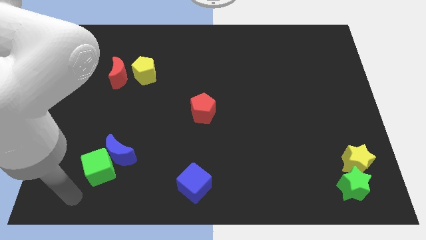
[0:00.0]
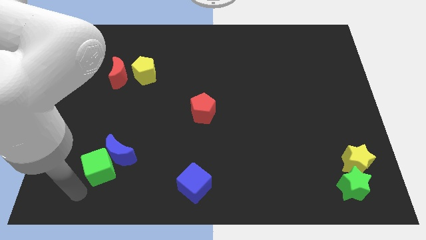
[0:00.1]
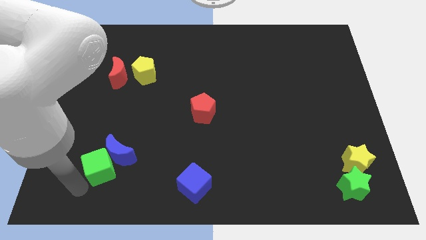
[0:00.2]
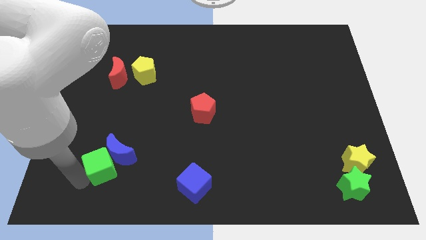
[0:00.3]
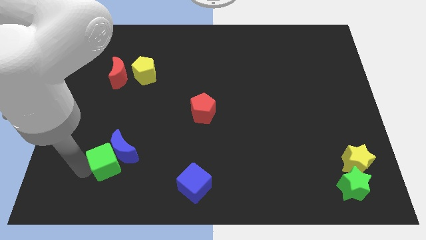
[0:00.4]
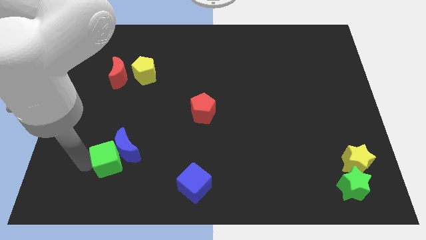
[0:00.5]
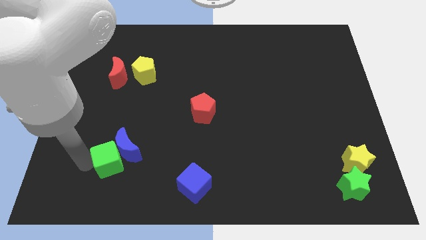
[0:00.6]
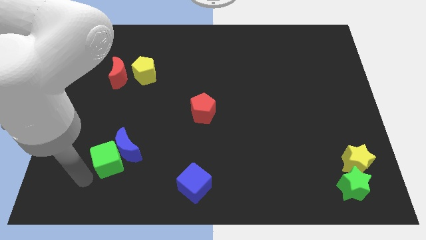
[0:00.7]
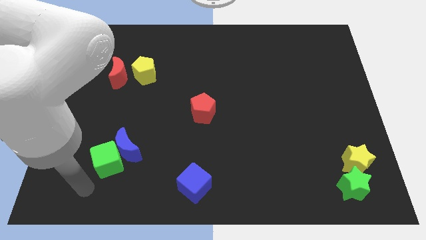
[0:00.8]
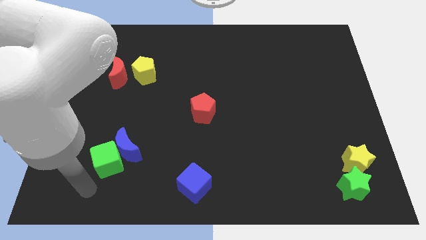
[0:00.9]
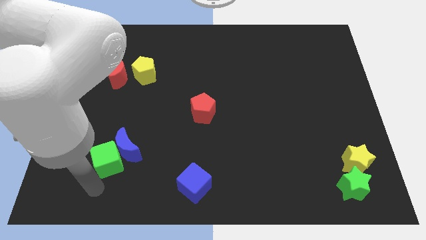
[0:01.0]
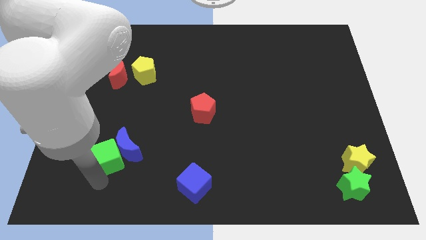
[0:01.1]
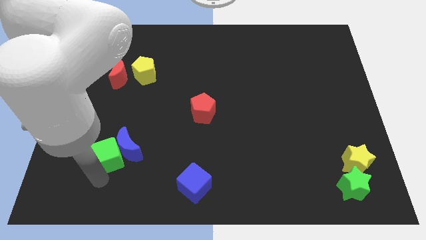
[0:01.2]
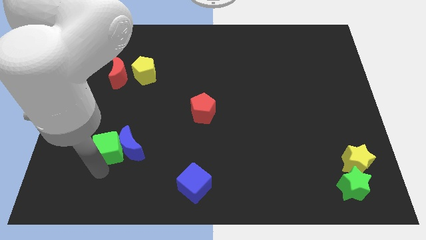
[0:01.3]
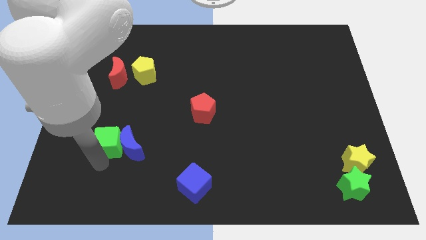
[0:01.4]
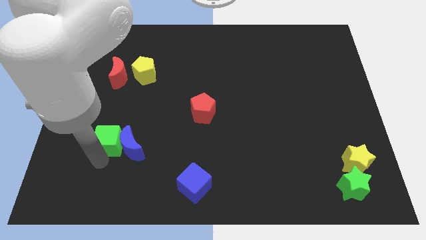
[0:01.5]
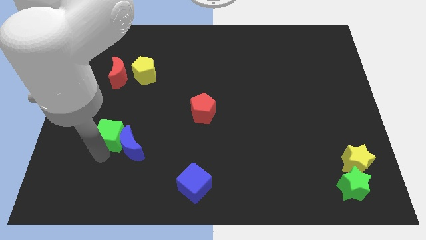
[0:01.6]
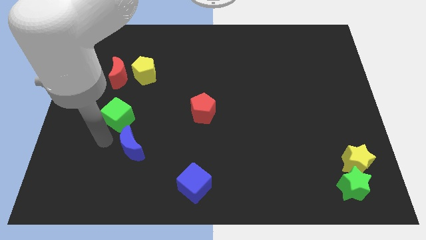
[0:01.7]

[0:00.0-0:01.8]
separate green cube from the blue moon

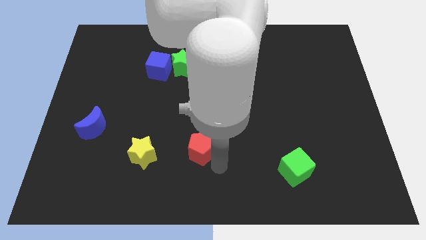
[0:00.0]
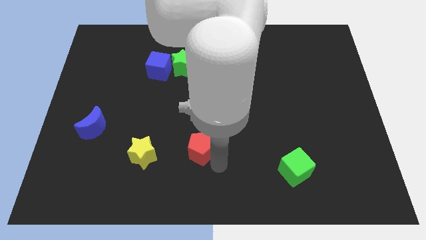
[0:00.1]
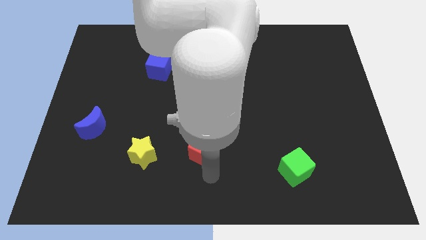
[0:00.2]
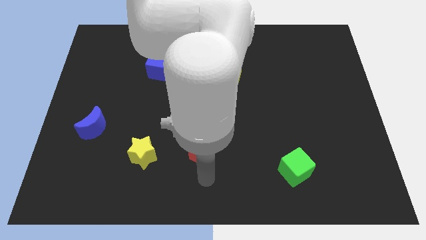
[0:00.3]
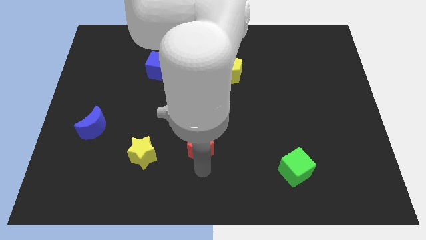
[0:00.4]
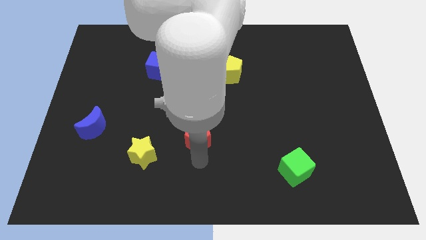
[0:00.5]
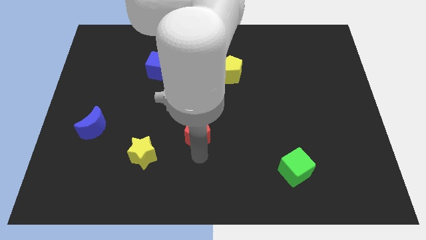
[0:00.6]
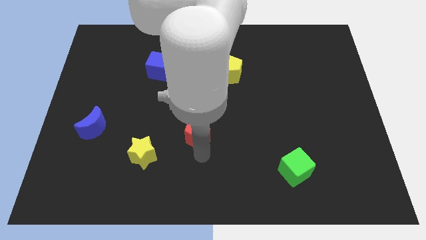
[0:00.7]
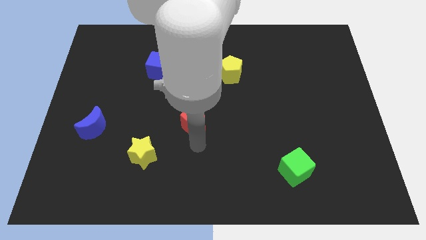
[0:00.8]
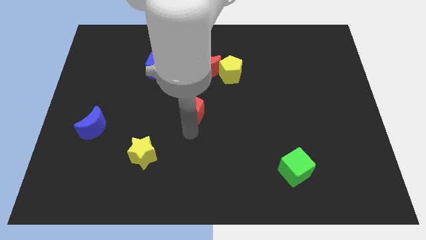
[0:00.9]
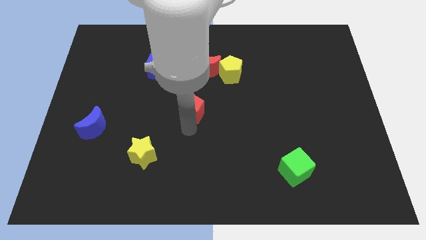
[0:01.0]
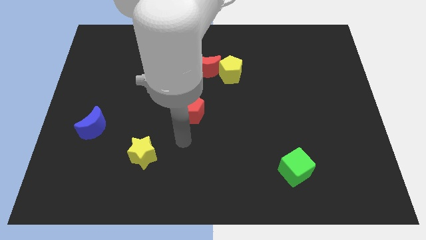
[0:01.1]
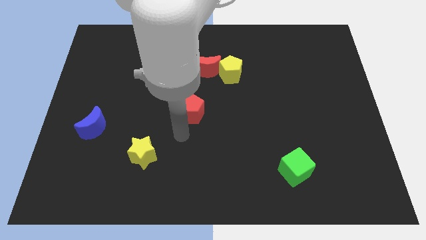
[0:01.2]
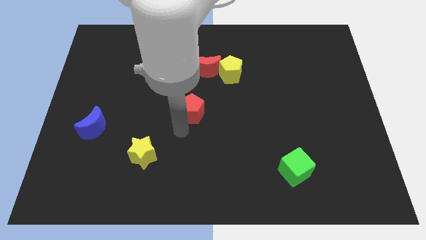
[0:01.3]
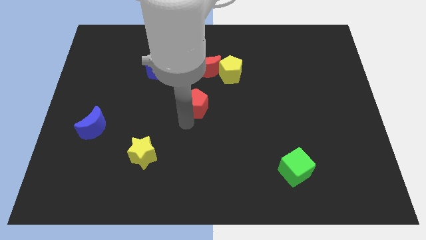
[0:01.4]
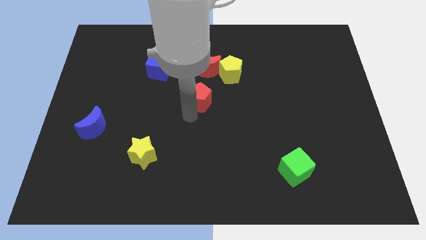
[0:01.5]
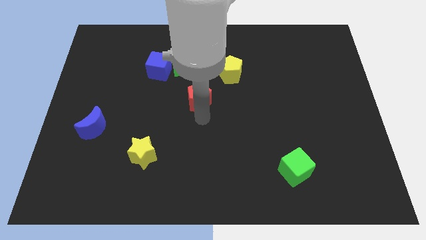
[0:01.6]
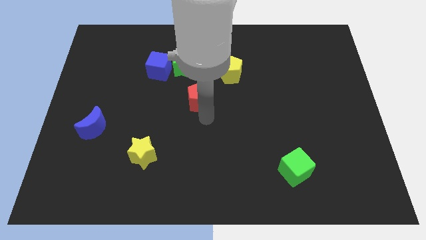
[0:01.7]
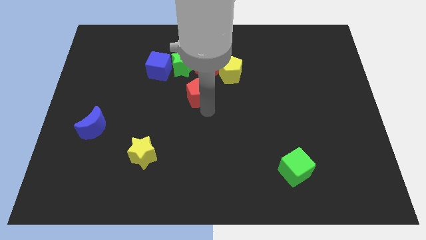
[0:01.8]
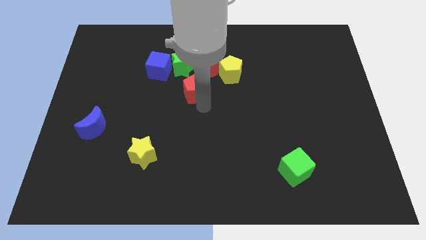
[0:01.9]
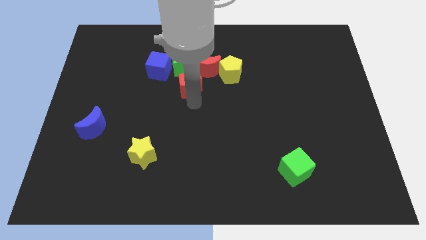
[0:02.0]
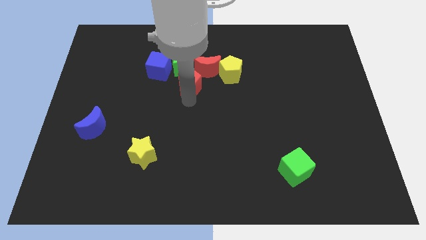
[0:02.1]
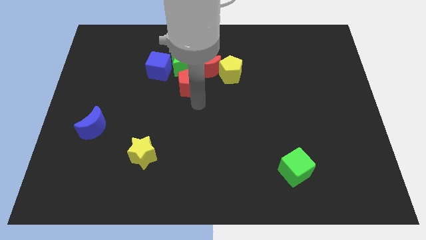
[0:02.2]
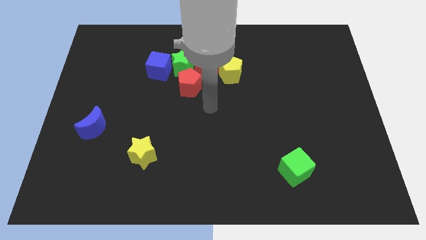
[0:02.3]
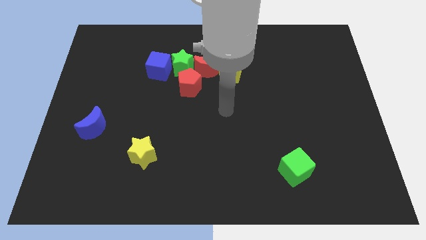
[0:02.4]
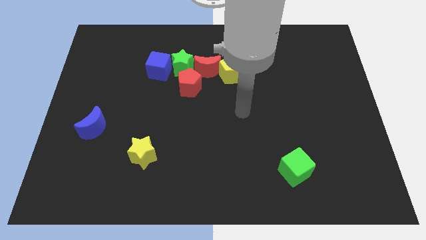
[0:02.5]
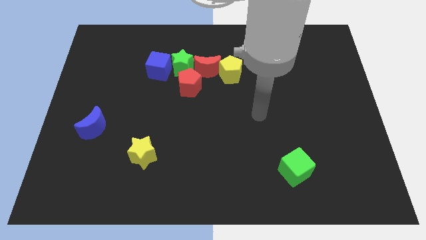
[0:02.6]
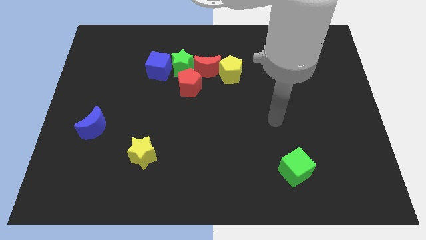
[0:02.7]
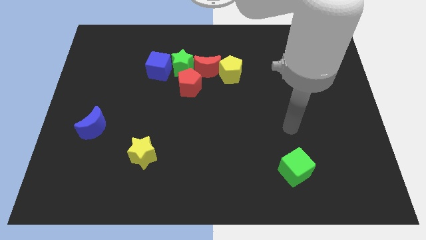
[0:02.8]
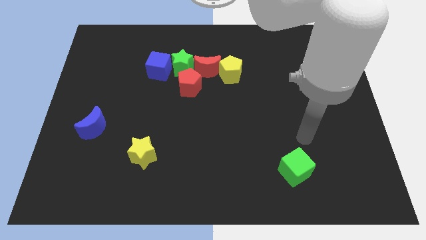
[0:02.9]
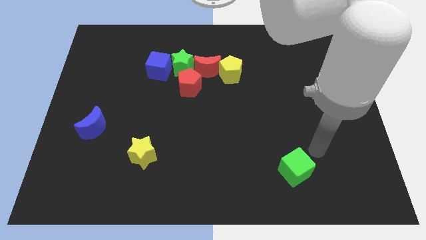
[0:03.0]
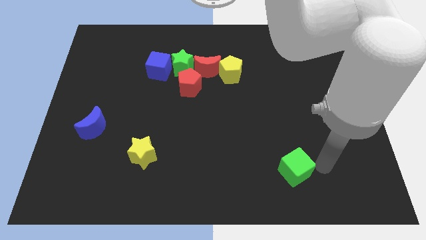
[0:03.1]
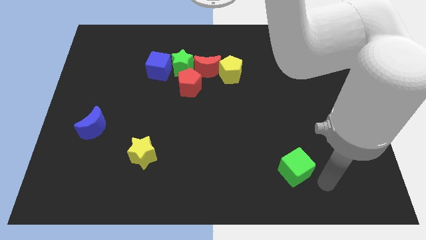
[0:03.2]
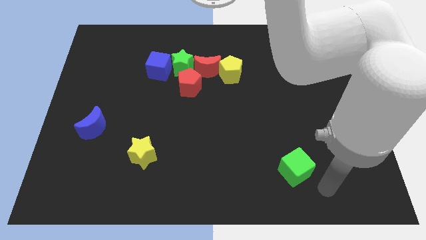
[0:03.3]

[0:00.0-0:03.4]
move the red pentagon bottom right to green star

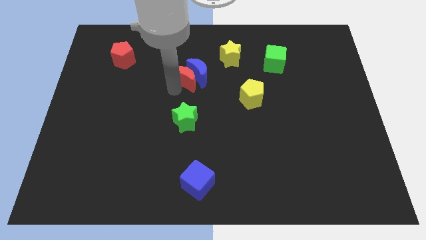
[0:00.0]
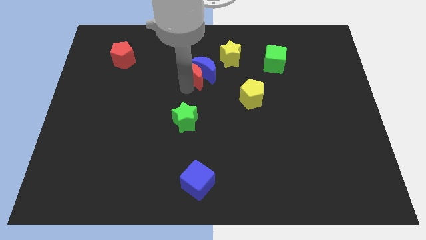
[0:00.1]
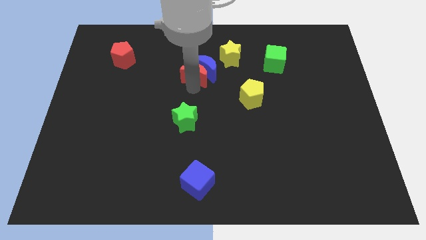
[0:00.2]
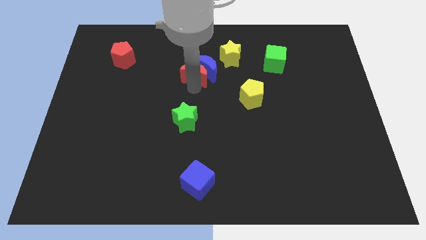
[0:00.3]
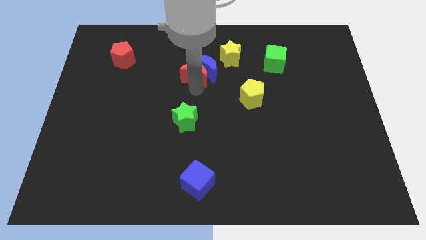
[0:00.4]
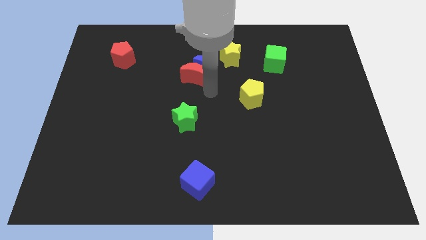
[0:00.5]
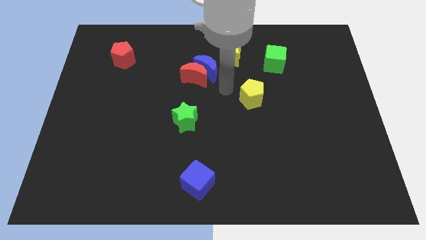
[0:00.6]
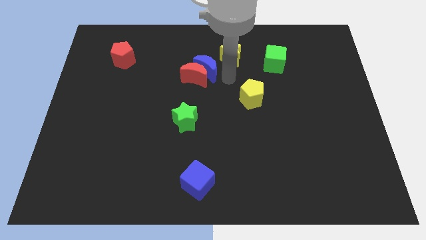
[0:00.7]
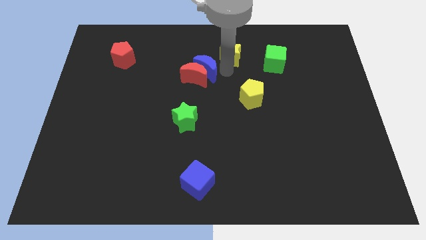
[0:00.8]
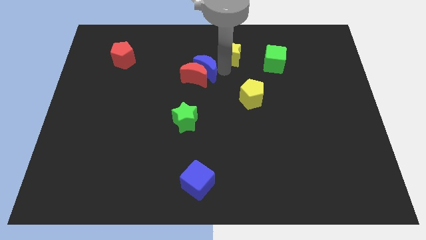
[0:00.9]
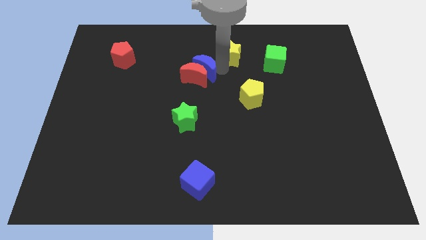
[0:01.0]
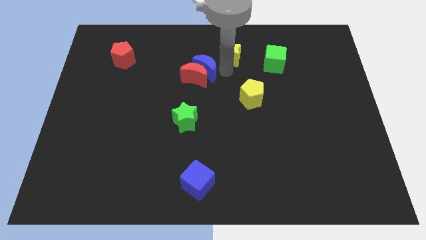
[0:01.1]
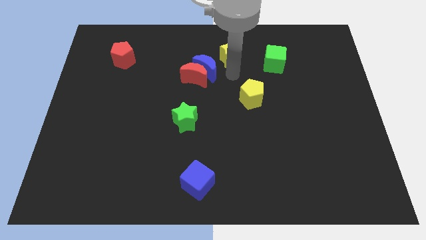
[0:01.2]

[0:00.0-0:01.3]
place red crescent and blue crescent to the bottom left side of the yellow star

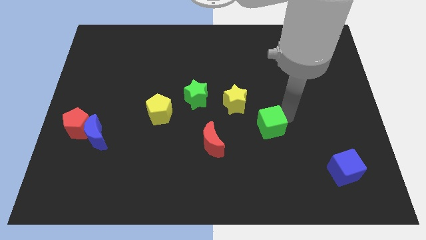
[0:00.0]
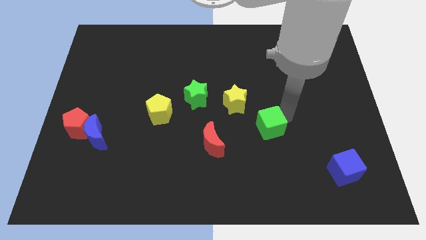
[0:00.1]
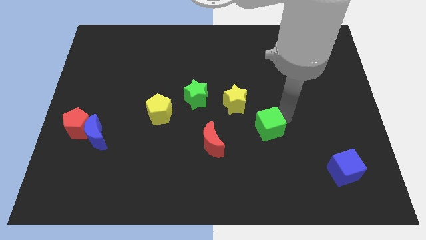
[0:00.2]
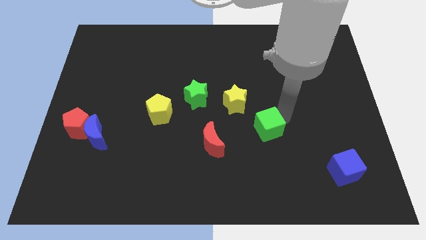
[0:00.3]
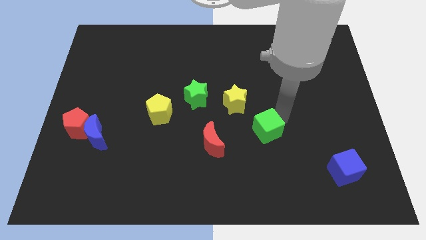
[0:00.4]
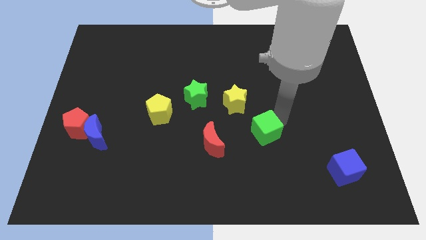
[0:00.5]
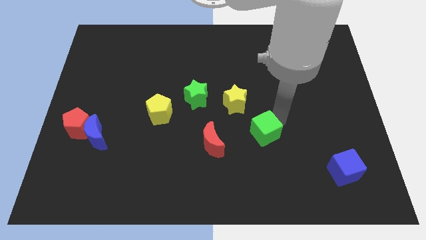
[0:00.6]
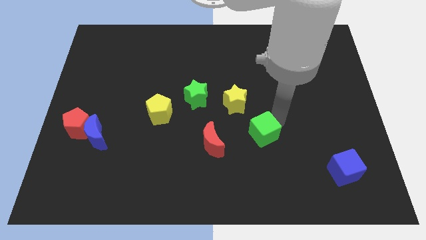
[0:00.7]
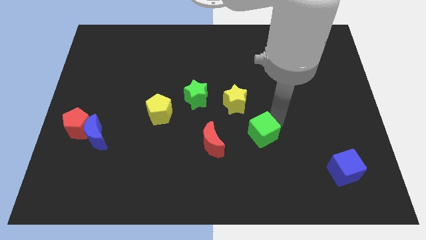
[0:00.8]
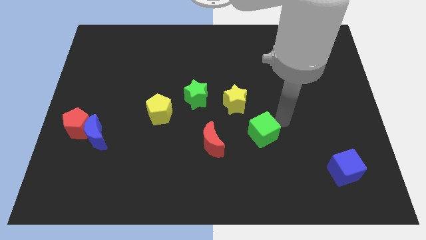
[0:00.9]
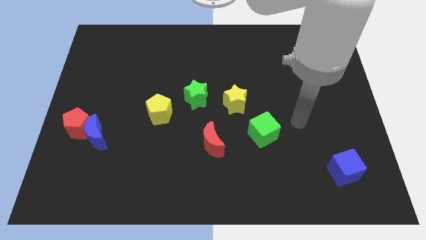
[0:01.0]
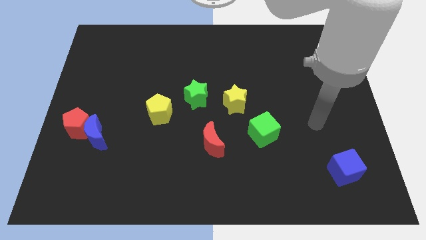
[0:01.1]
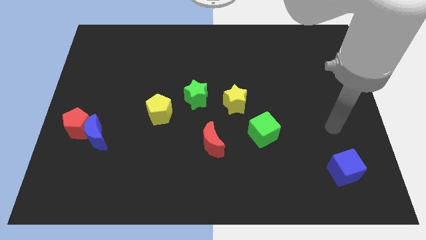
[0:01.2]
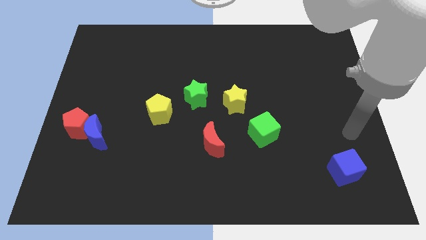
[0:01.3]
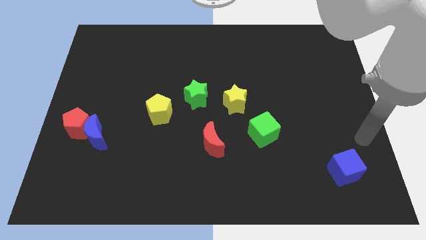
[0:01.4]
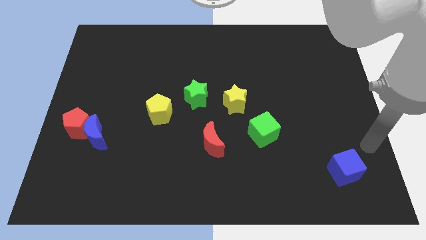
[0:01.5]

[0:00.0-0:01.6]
put the green cube to the bottom right of the yellow star

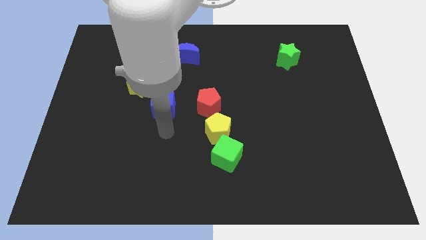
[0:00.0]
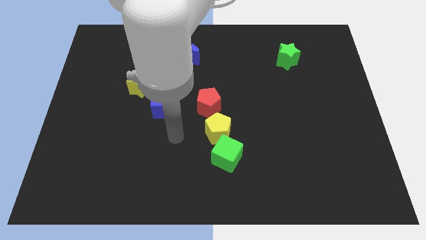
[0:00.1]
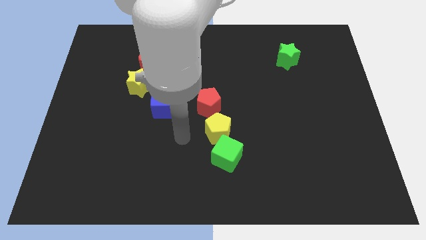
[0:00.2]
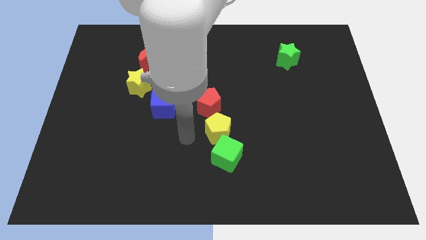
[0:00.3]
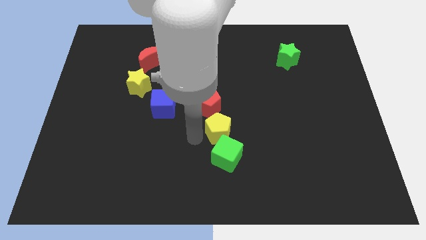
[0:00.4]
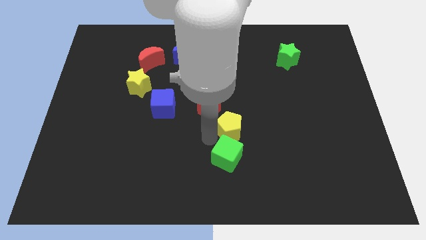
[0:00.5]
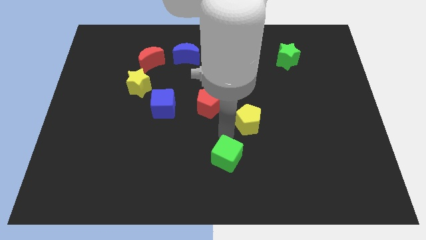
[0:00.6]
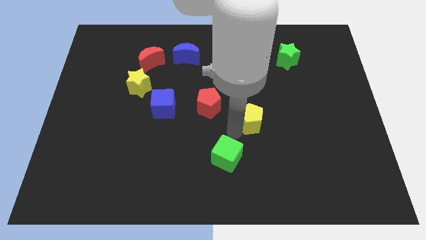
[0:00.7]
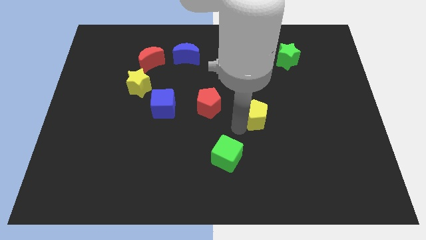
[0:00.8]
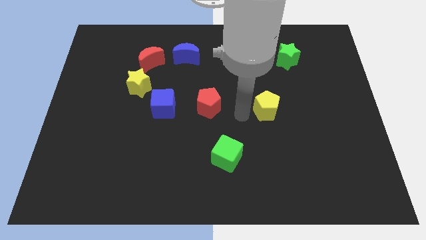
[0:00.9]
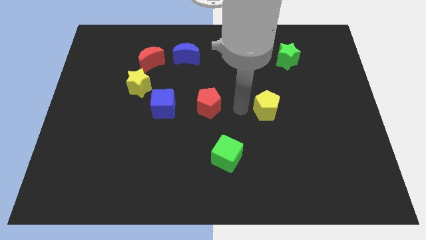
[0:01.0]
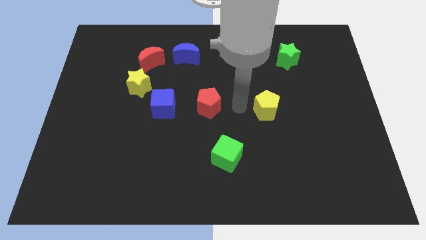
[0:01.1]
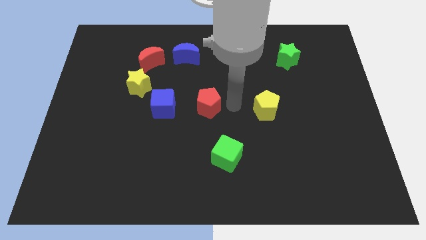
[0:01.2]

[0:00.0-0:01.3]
push the yellow pentagon slightly towards the right
